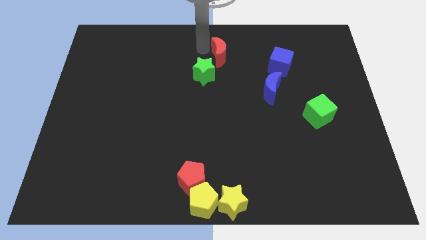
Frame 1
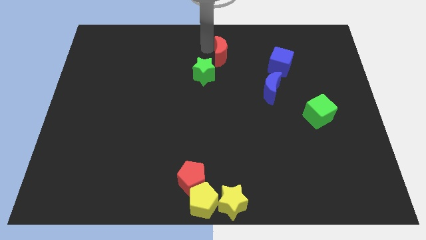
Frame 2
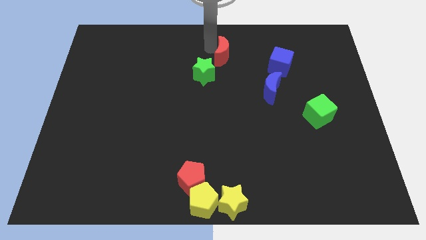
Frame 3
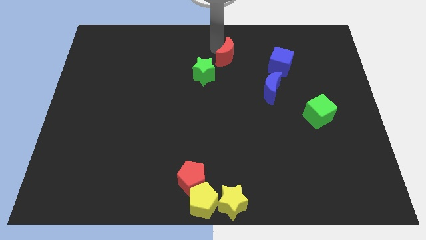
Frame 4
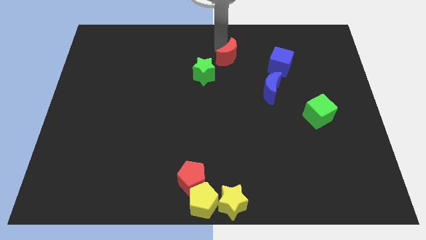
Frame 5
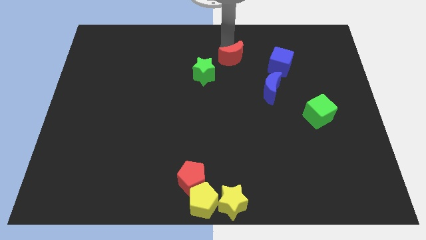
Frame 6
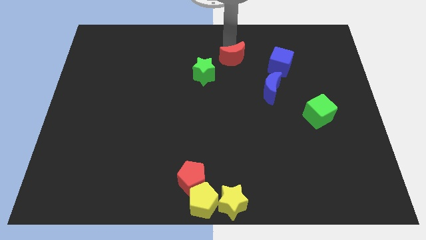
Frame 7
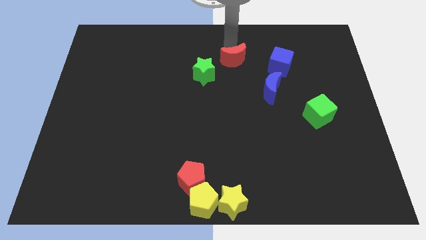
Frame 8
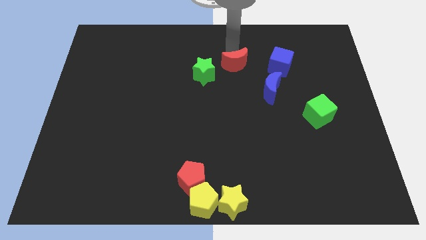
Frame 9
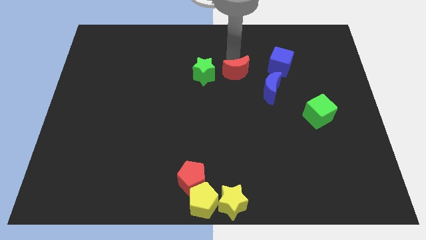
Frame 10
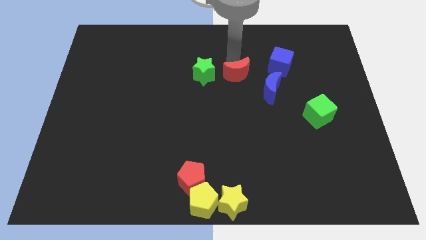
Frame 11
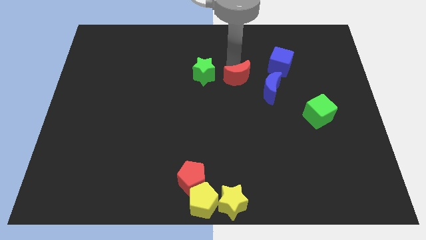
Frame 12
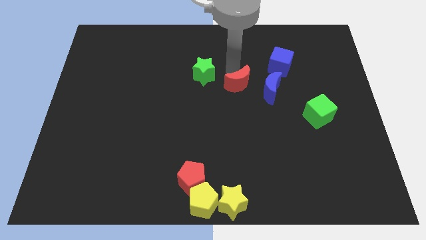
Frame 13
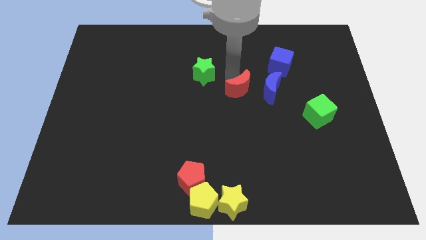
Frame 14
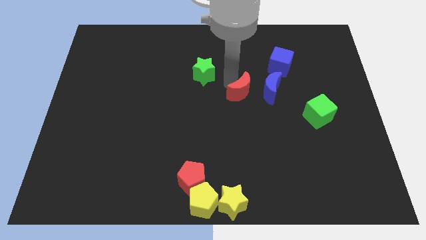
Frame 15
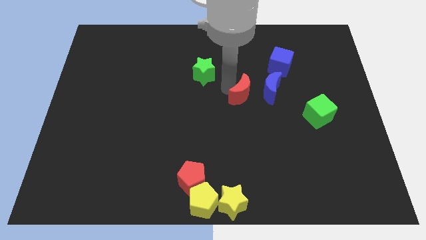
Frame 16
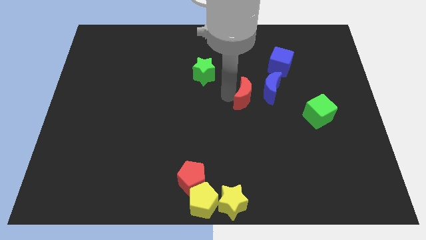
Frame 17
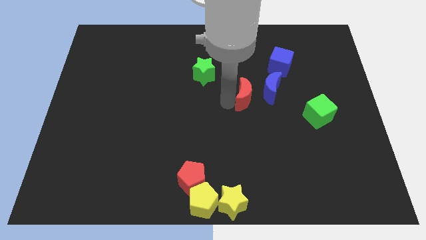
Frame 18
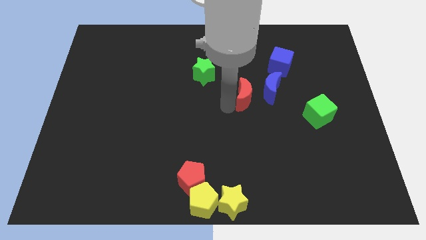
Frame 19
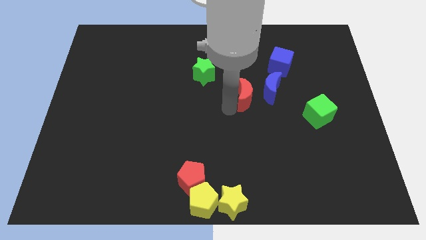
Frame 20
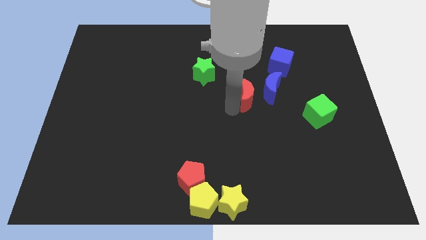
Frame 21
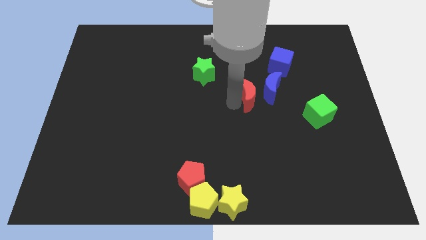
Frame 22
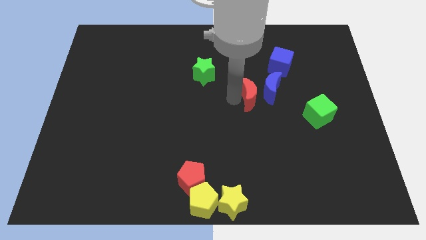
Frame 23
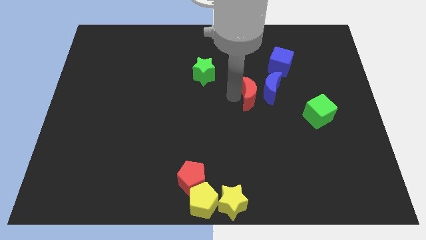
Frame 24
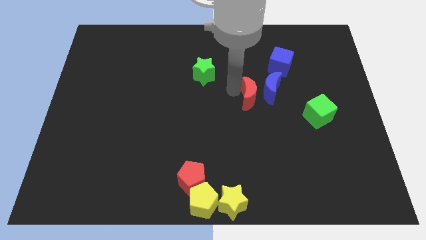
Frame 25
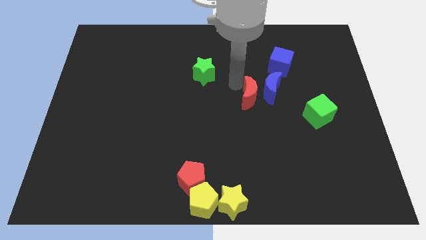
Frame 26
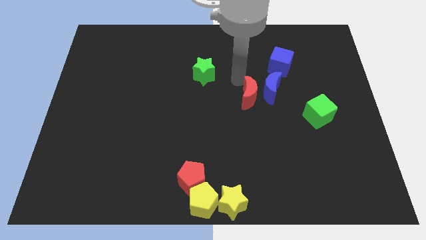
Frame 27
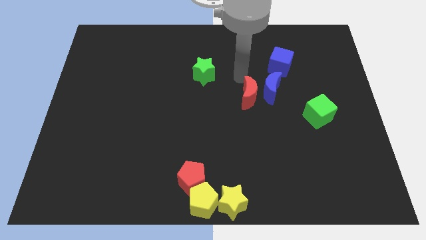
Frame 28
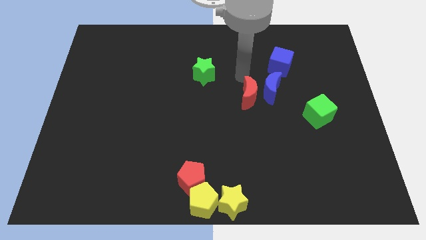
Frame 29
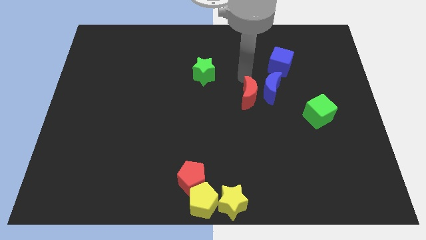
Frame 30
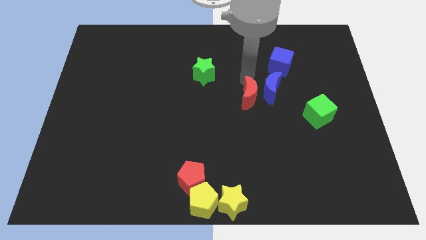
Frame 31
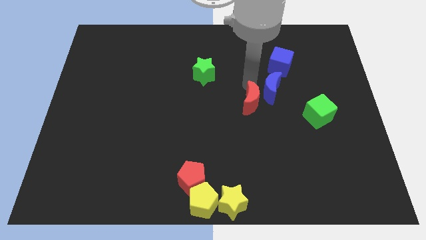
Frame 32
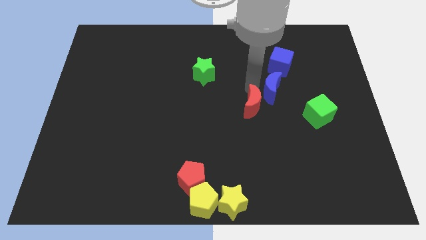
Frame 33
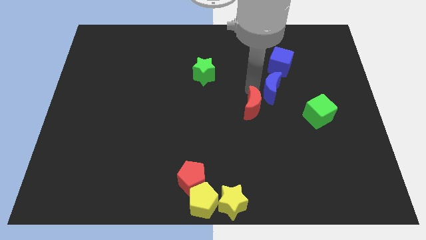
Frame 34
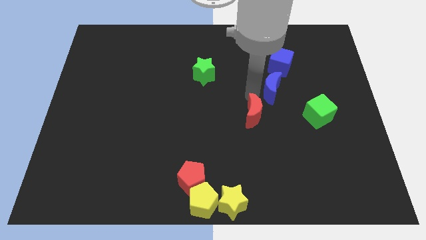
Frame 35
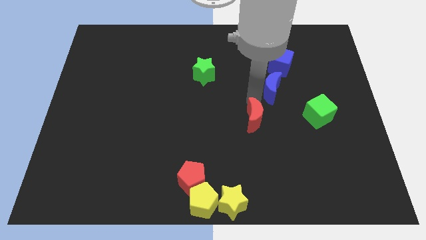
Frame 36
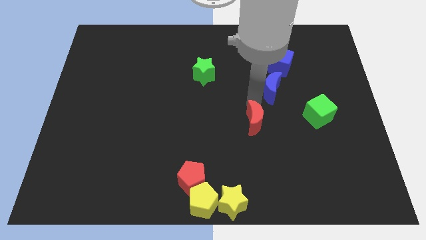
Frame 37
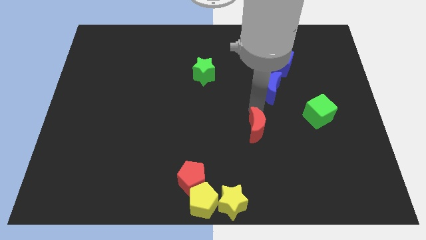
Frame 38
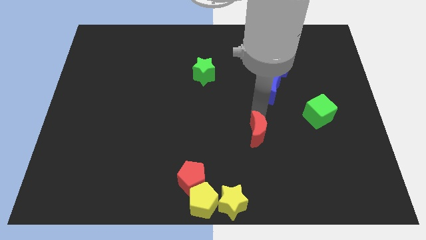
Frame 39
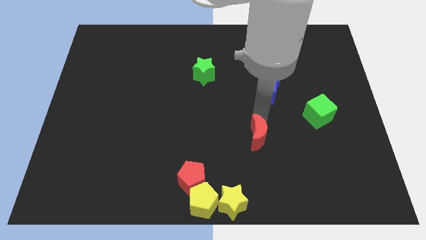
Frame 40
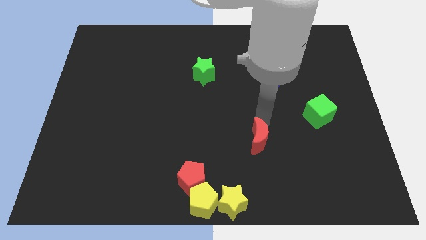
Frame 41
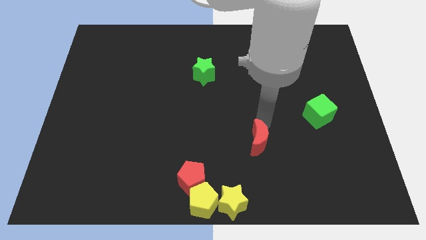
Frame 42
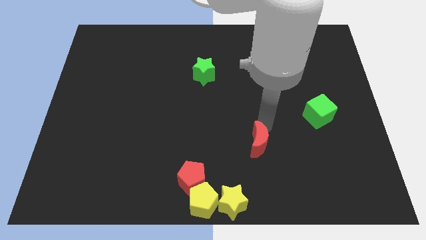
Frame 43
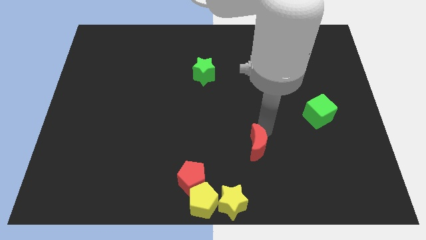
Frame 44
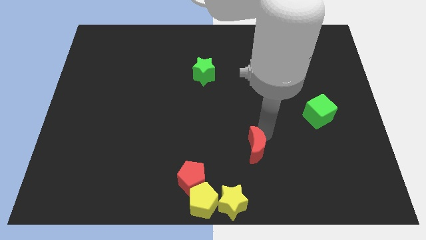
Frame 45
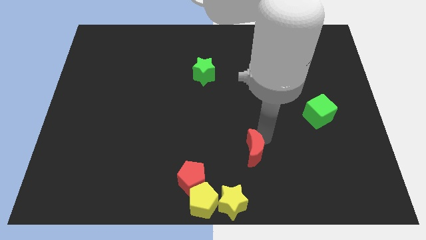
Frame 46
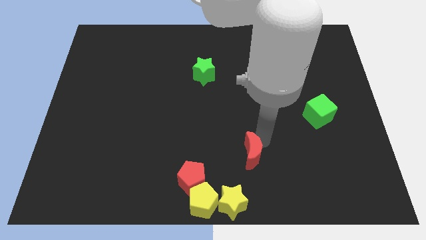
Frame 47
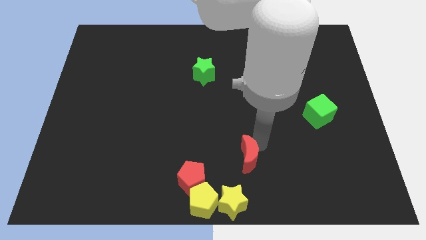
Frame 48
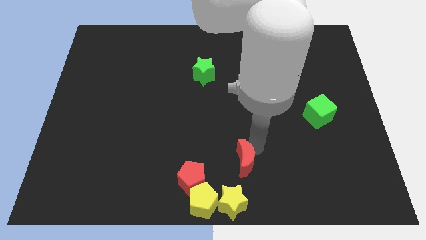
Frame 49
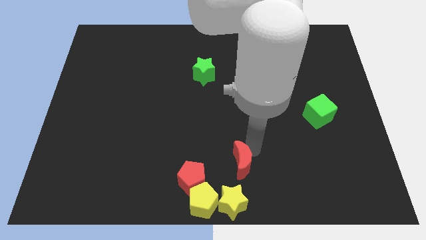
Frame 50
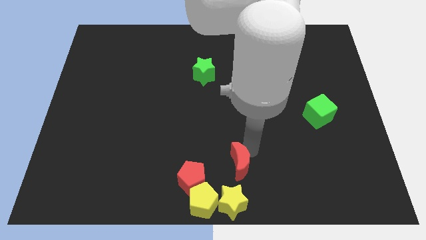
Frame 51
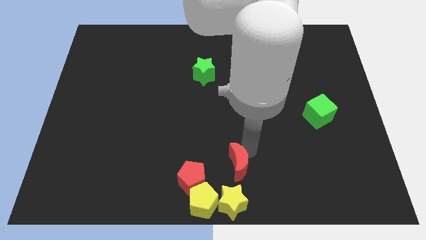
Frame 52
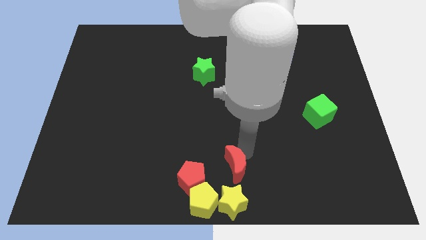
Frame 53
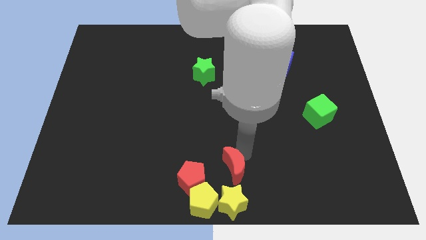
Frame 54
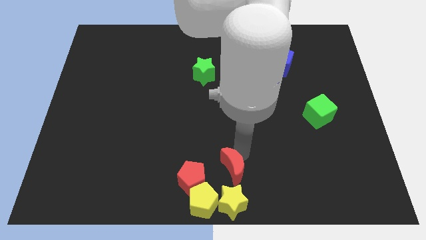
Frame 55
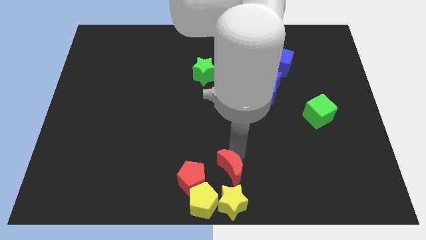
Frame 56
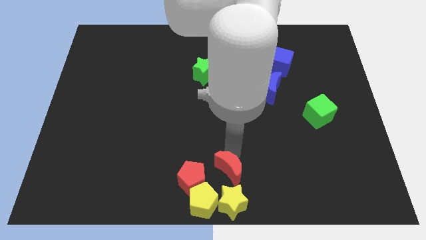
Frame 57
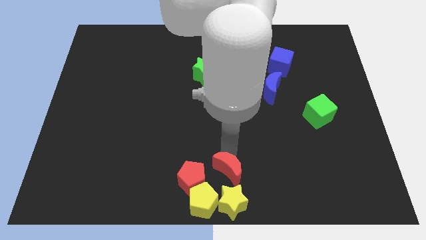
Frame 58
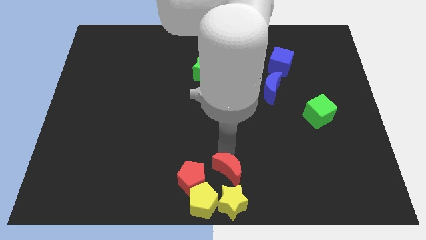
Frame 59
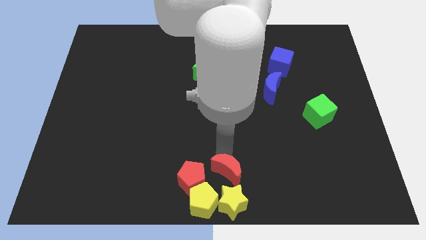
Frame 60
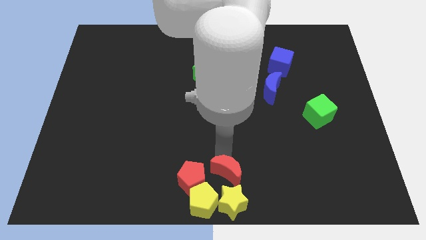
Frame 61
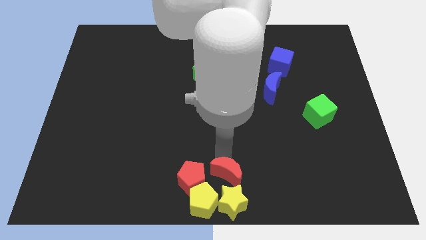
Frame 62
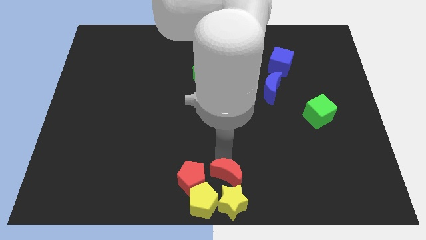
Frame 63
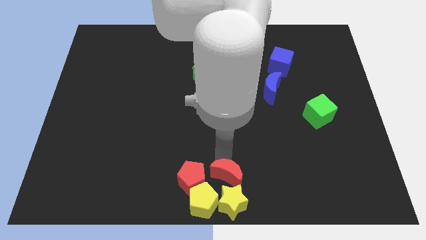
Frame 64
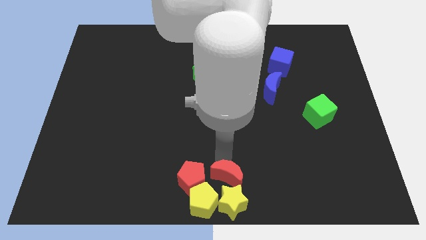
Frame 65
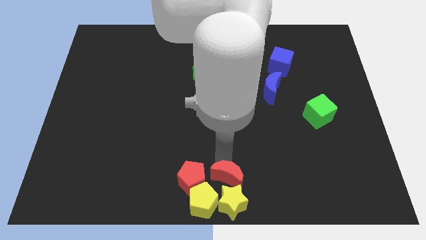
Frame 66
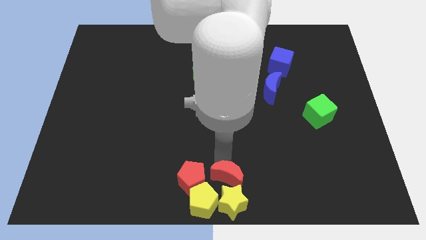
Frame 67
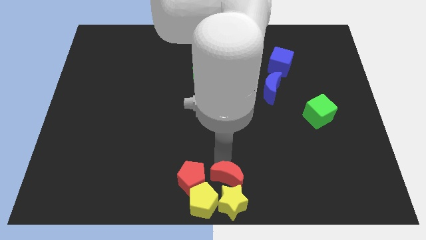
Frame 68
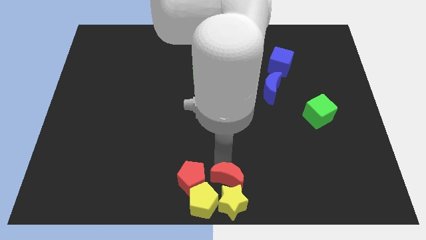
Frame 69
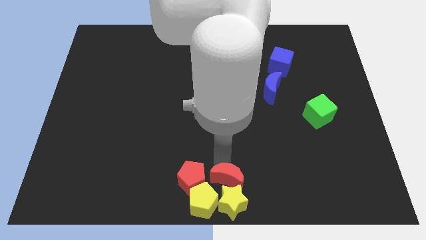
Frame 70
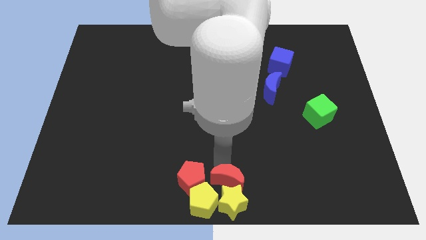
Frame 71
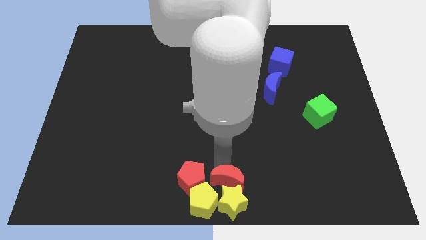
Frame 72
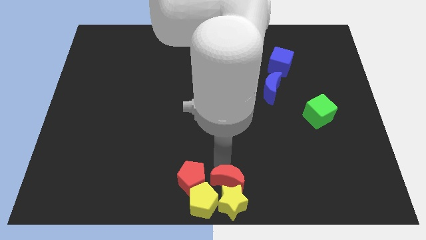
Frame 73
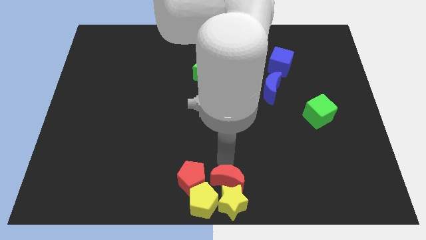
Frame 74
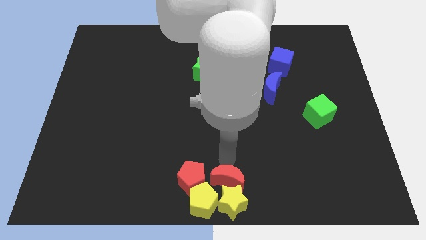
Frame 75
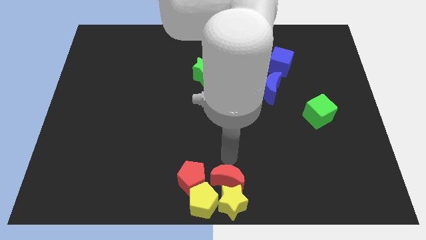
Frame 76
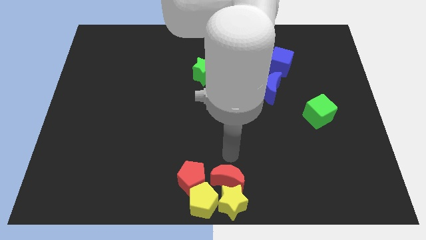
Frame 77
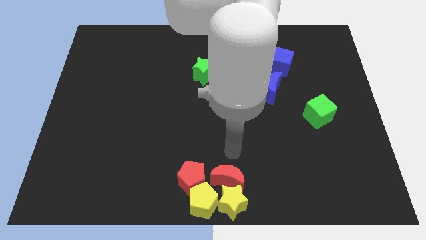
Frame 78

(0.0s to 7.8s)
move the red crescent above the yellow star

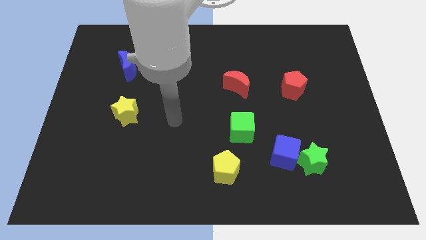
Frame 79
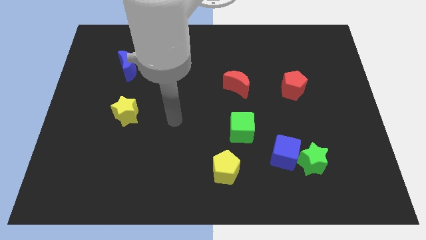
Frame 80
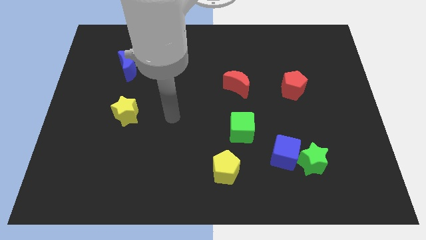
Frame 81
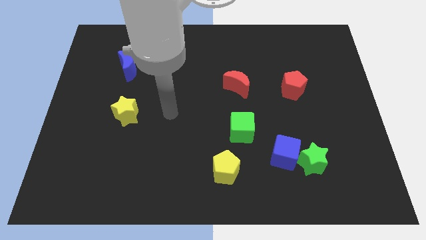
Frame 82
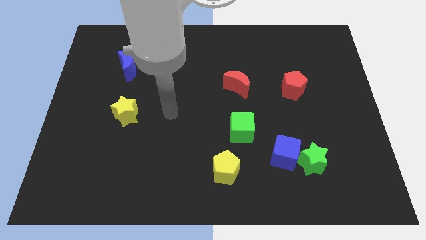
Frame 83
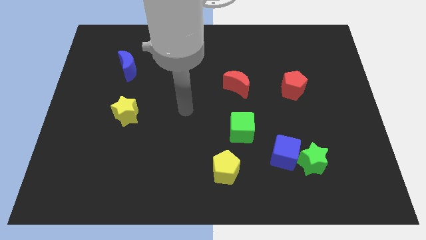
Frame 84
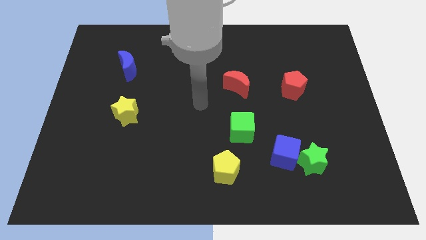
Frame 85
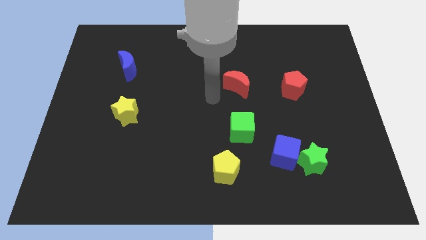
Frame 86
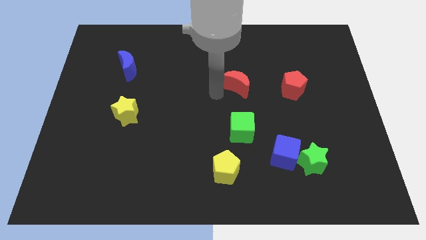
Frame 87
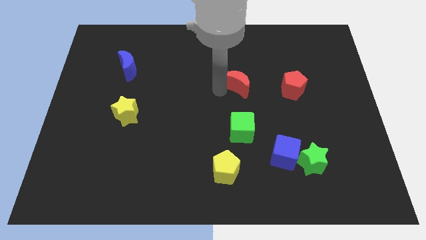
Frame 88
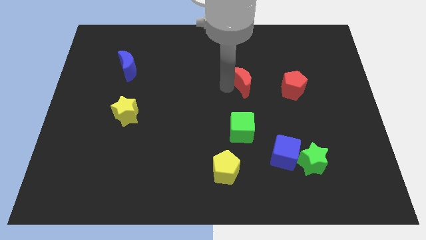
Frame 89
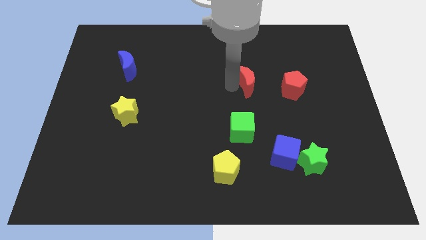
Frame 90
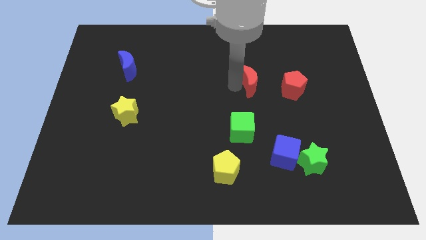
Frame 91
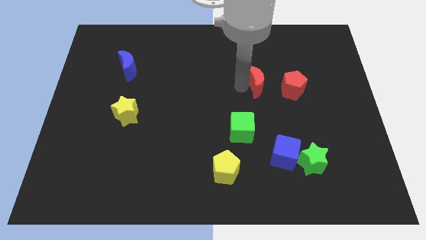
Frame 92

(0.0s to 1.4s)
move the red moon slightly to the right
